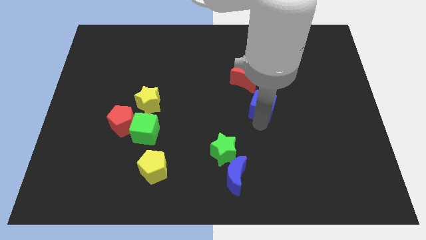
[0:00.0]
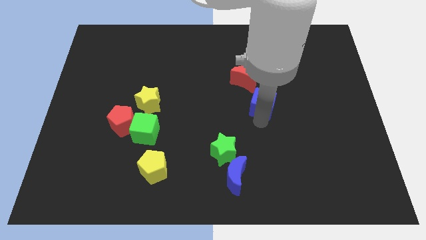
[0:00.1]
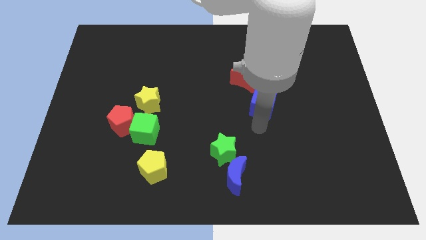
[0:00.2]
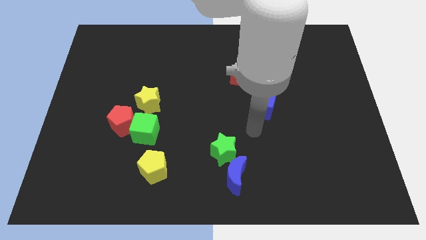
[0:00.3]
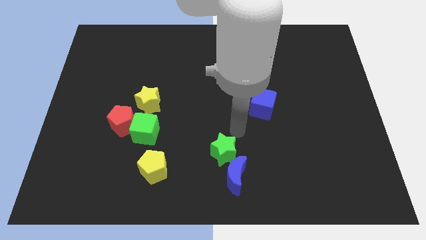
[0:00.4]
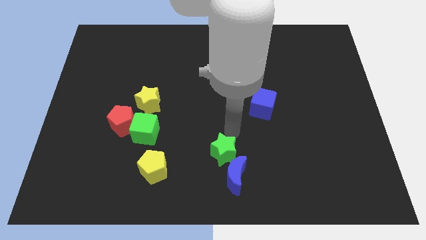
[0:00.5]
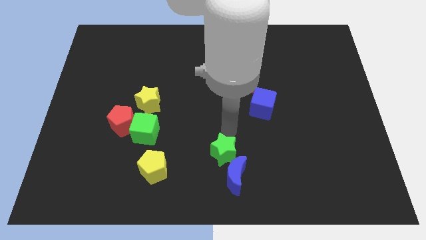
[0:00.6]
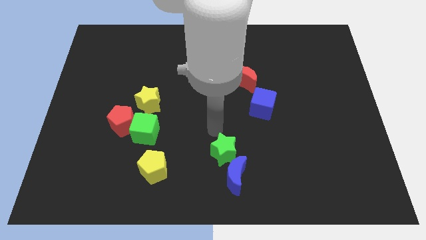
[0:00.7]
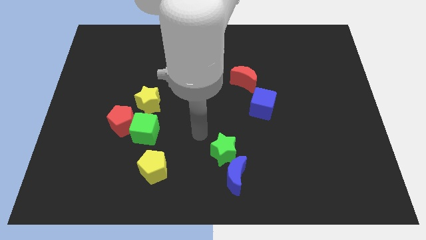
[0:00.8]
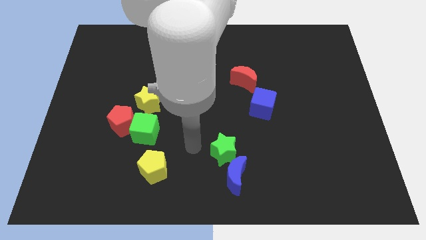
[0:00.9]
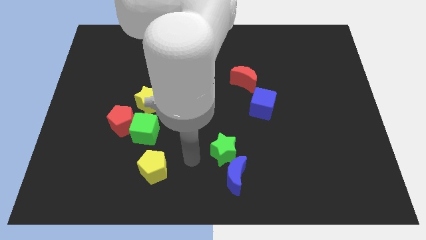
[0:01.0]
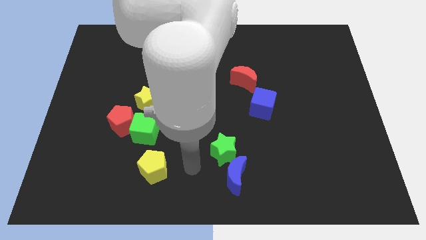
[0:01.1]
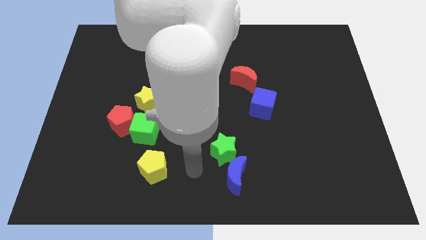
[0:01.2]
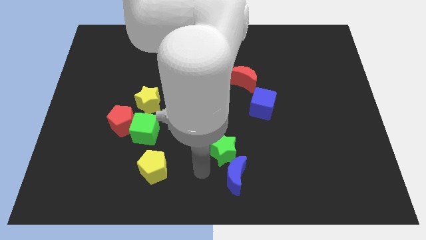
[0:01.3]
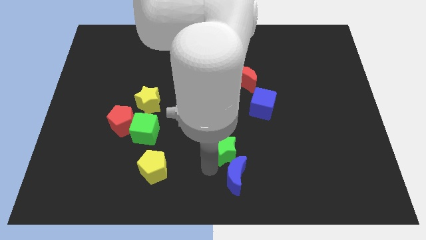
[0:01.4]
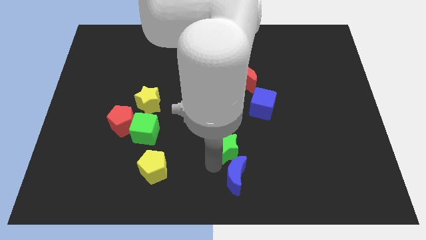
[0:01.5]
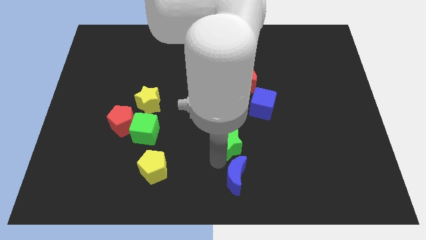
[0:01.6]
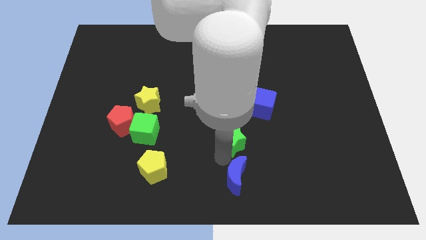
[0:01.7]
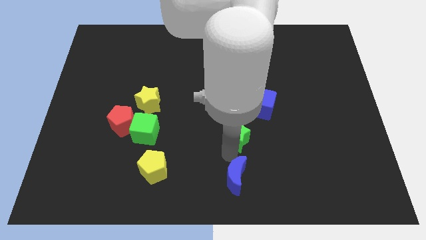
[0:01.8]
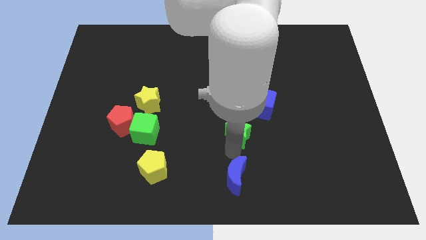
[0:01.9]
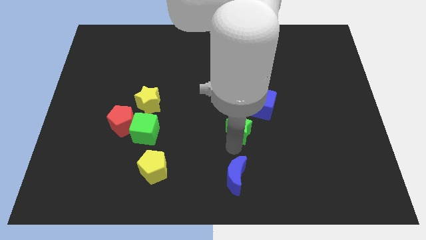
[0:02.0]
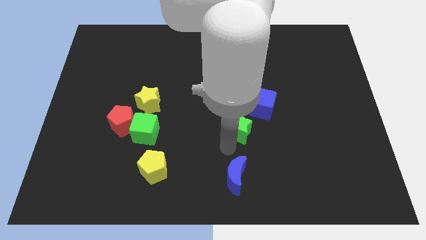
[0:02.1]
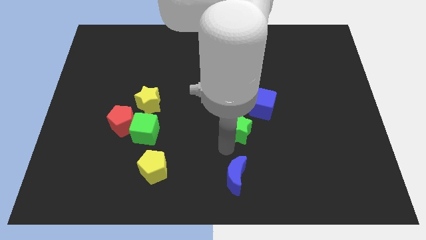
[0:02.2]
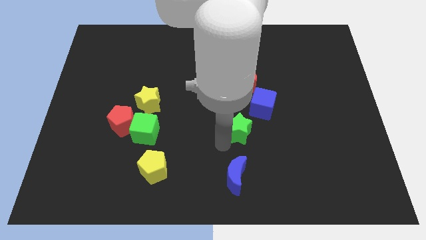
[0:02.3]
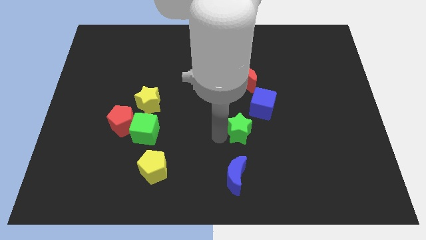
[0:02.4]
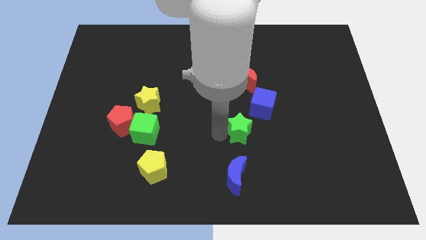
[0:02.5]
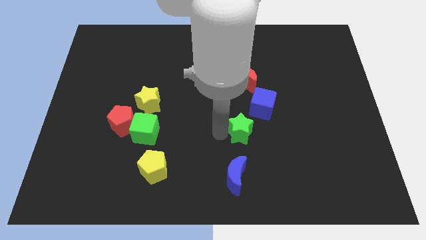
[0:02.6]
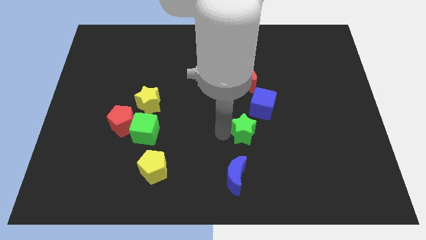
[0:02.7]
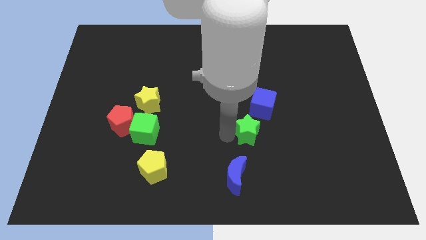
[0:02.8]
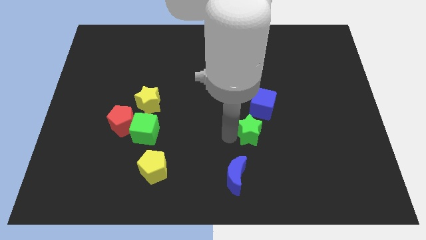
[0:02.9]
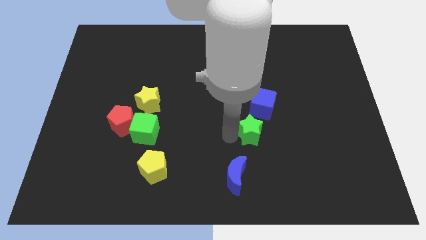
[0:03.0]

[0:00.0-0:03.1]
place the green star between blue cube and blue moon

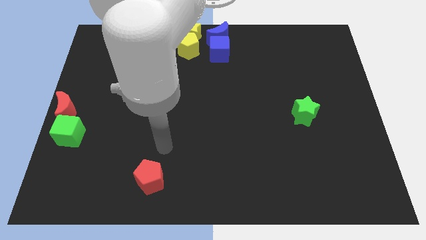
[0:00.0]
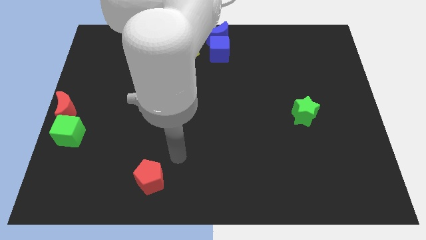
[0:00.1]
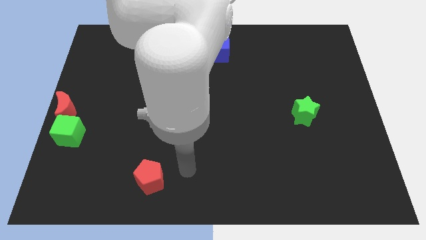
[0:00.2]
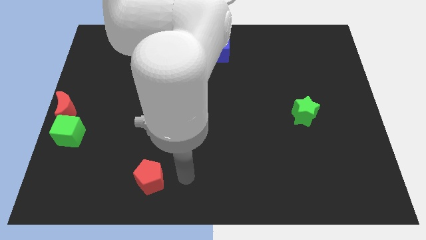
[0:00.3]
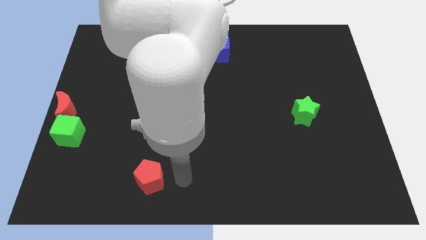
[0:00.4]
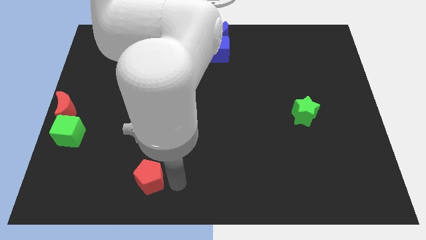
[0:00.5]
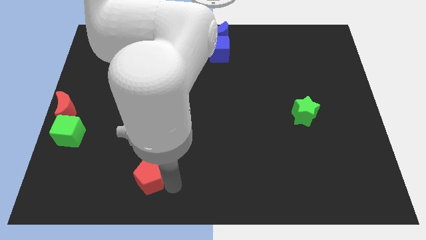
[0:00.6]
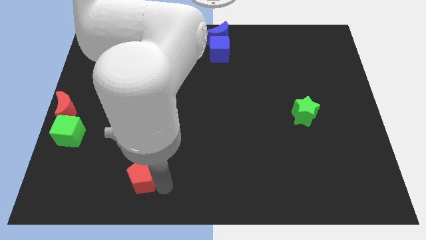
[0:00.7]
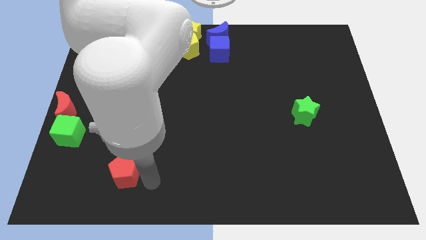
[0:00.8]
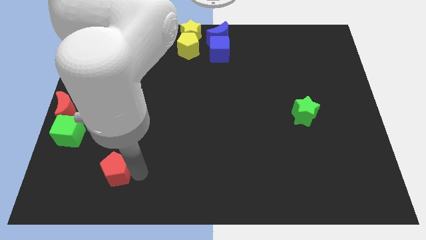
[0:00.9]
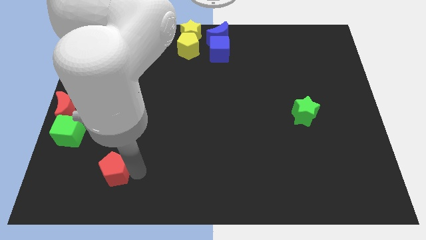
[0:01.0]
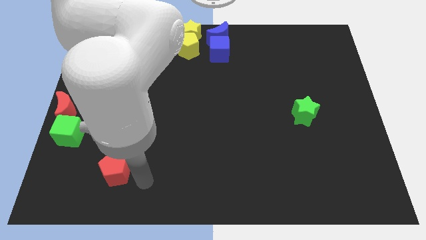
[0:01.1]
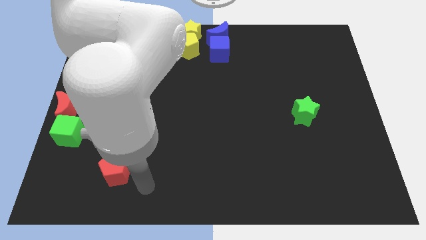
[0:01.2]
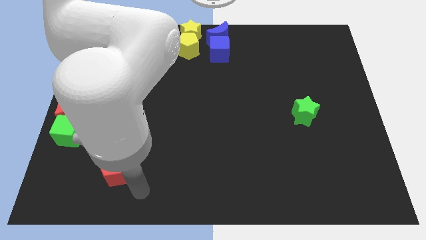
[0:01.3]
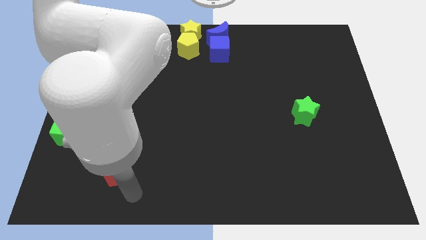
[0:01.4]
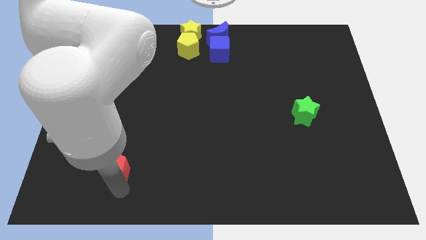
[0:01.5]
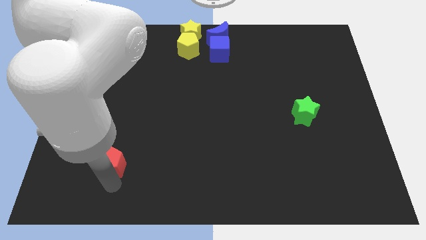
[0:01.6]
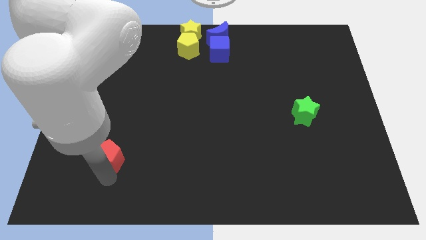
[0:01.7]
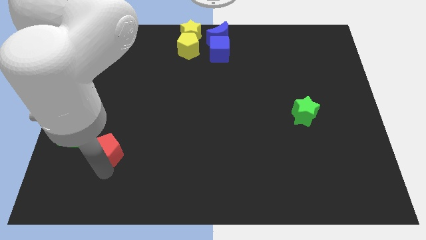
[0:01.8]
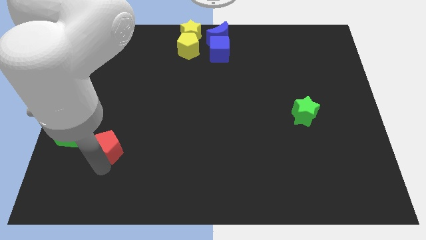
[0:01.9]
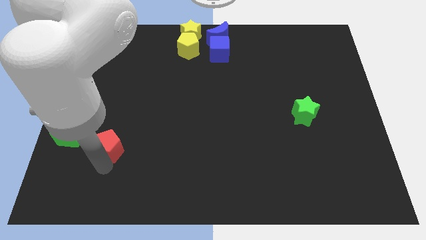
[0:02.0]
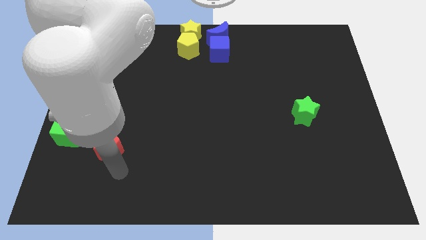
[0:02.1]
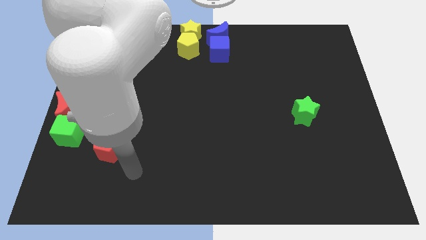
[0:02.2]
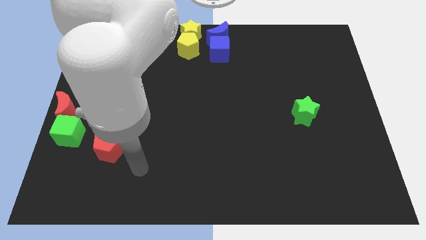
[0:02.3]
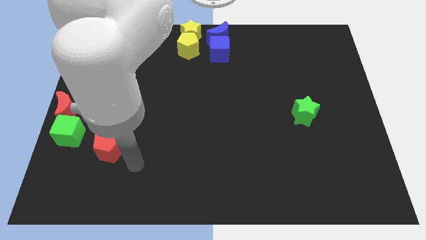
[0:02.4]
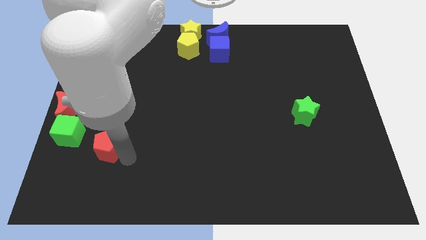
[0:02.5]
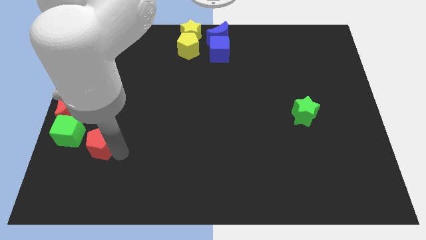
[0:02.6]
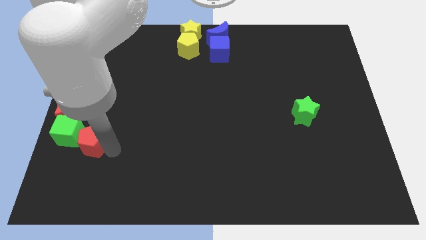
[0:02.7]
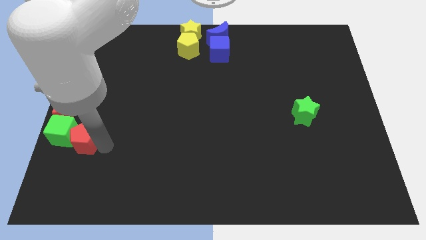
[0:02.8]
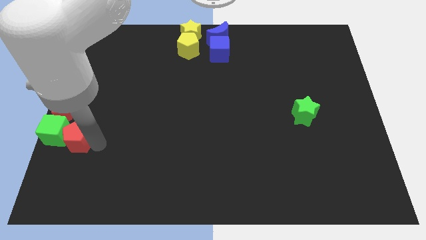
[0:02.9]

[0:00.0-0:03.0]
push red pentagon right to green cube

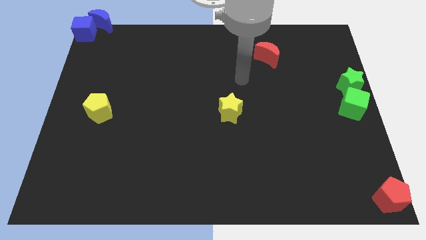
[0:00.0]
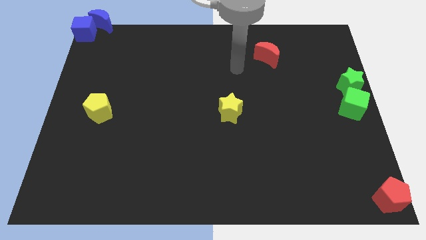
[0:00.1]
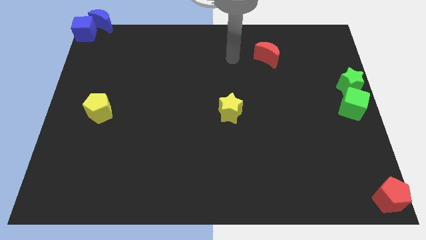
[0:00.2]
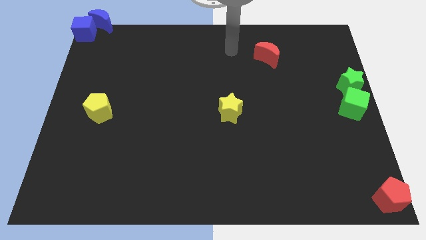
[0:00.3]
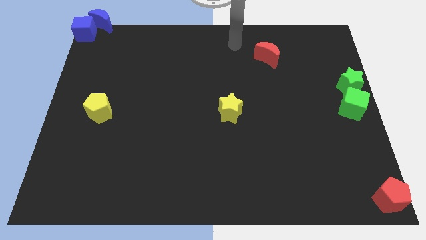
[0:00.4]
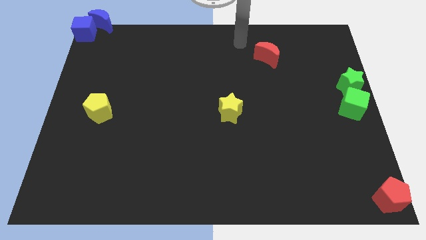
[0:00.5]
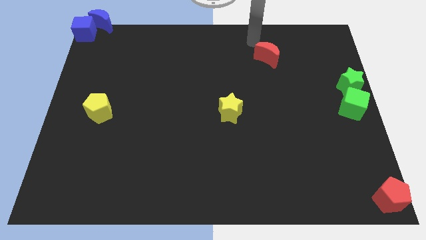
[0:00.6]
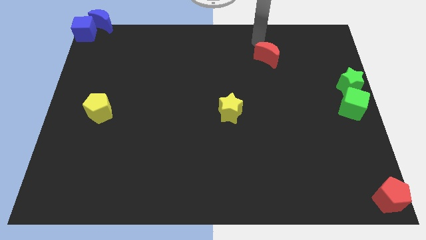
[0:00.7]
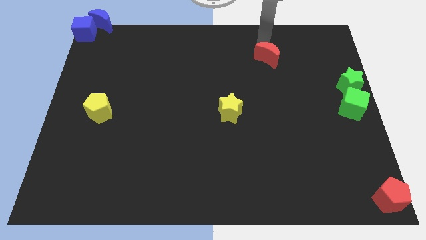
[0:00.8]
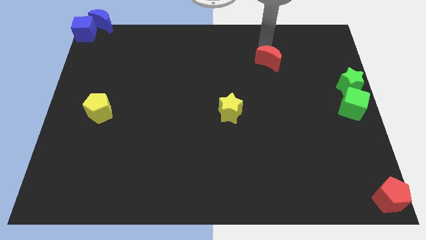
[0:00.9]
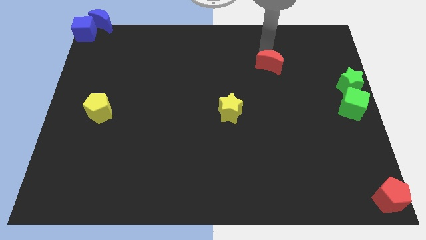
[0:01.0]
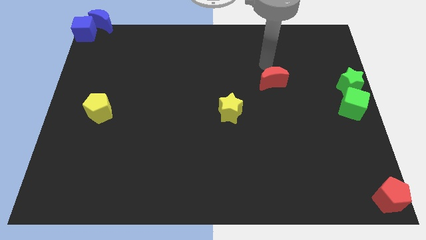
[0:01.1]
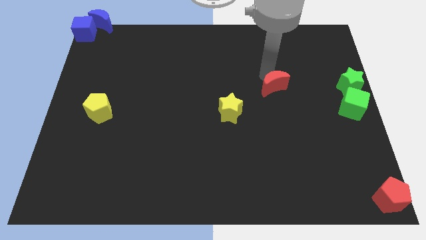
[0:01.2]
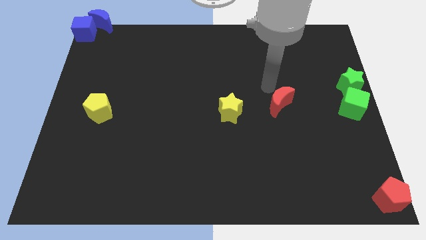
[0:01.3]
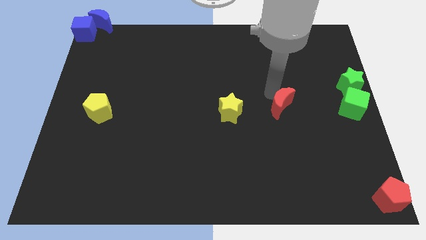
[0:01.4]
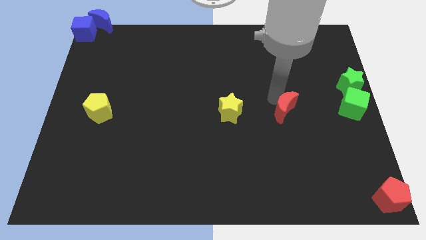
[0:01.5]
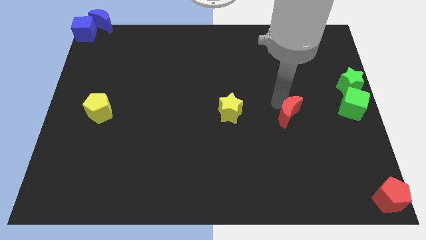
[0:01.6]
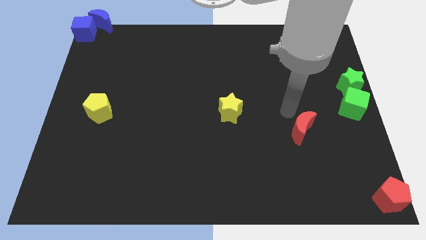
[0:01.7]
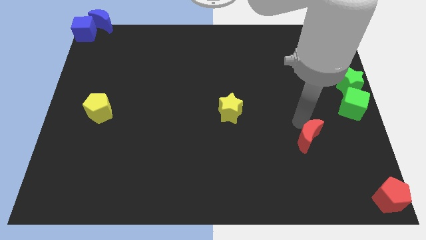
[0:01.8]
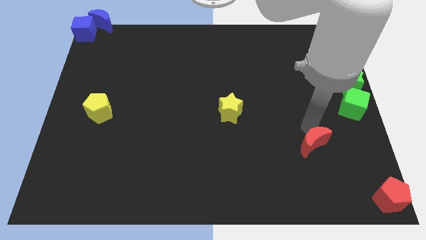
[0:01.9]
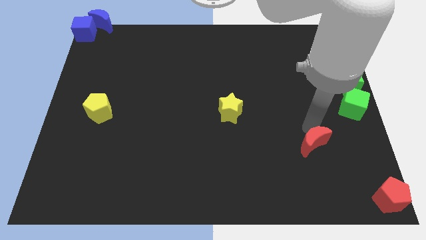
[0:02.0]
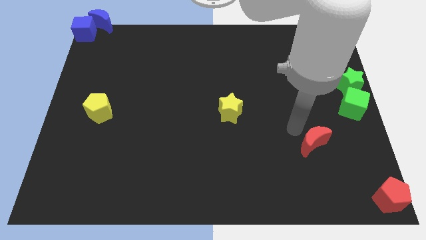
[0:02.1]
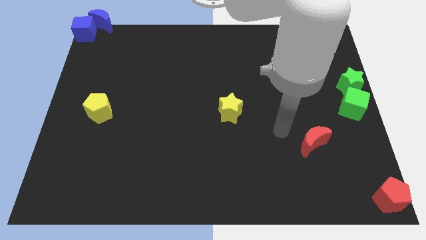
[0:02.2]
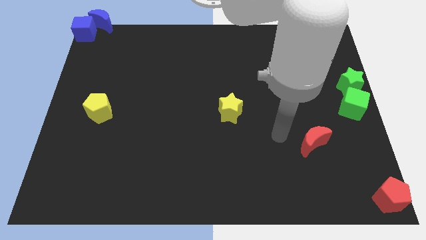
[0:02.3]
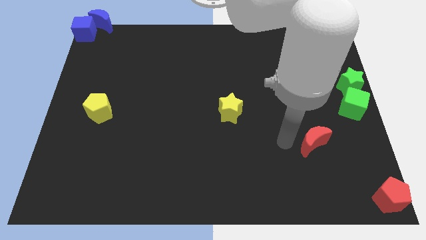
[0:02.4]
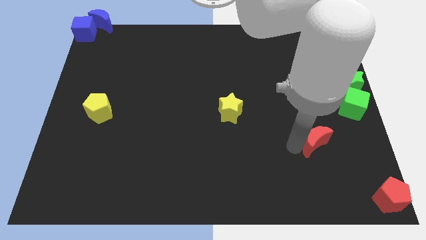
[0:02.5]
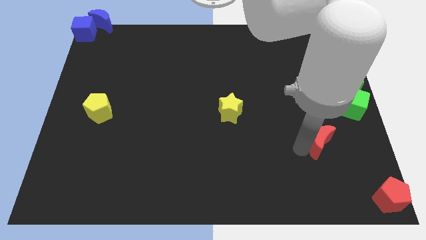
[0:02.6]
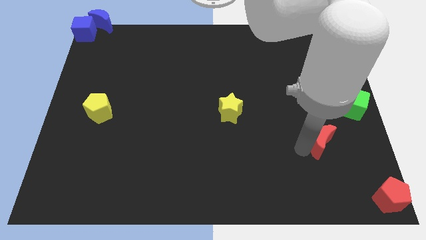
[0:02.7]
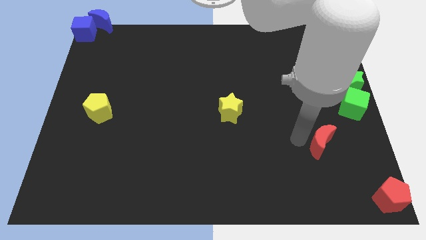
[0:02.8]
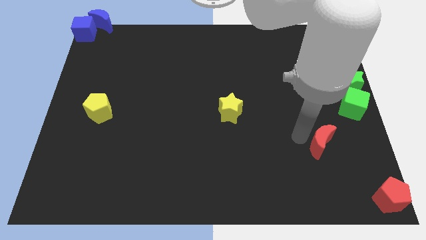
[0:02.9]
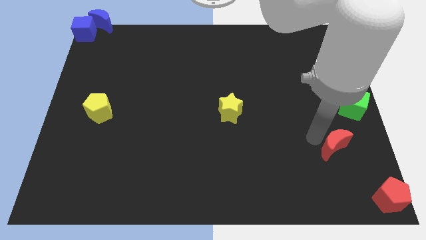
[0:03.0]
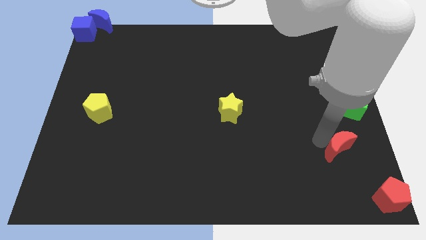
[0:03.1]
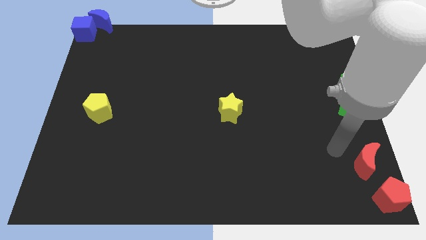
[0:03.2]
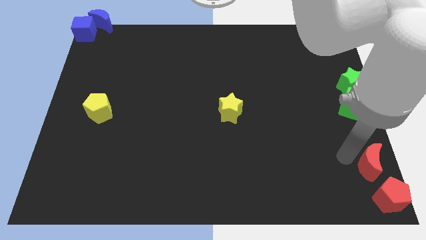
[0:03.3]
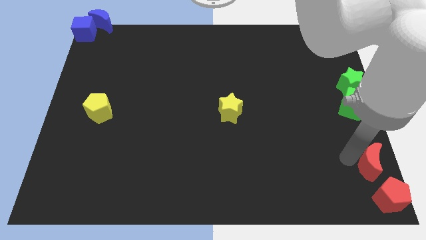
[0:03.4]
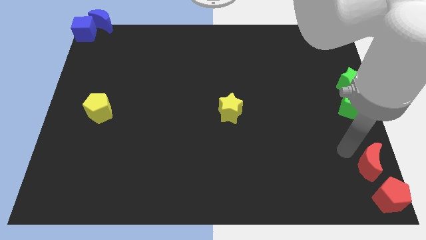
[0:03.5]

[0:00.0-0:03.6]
put the red moon in between the red pentagon and green cube
